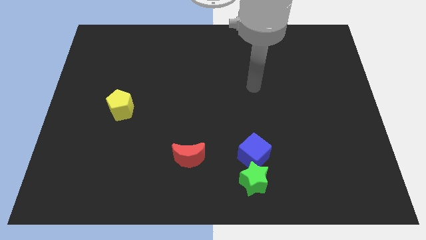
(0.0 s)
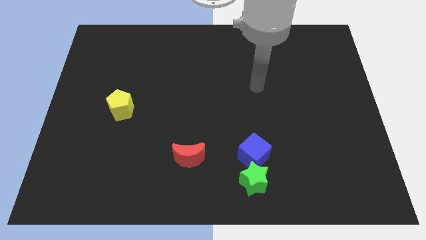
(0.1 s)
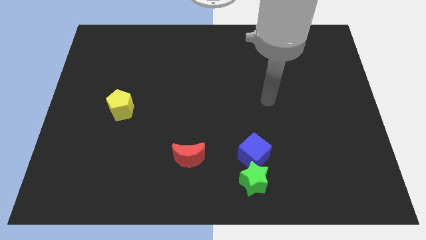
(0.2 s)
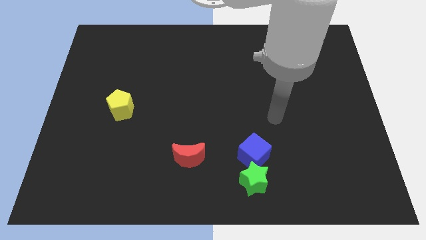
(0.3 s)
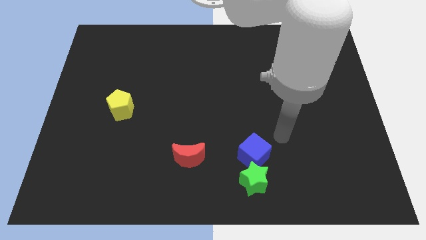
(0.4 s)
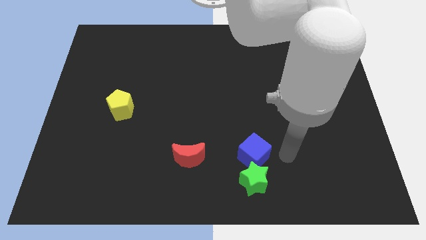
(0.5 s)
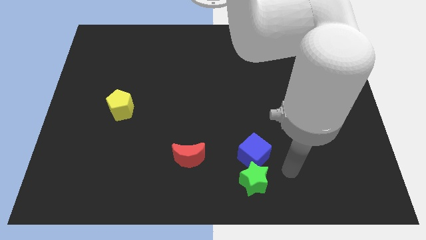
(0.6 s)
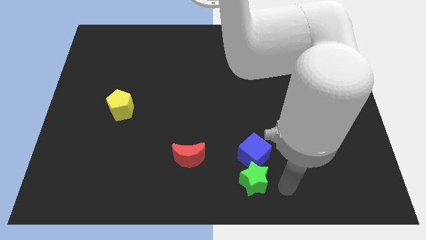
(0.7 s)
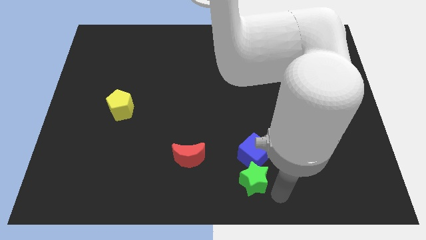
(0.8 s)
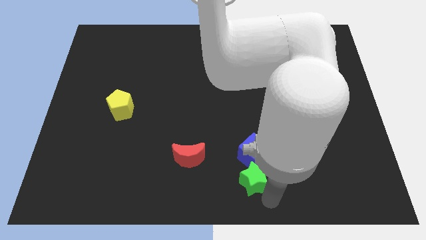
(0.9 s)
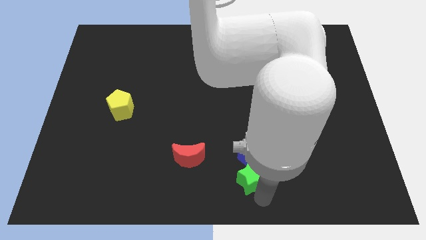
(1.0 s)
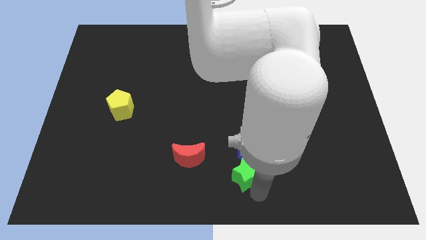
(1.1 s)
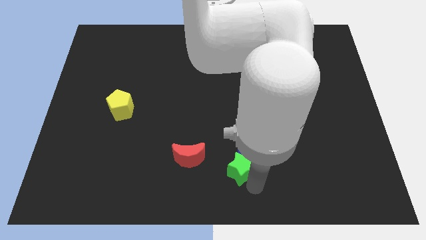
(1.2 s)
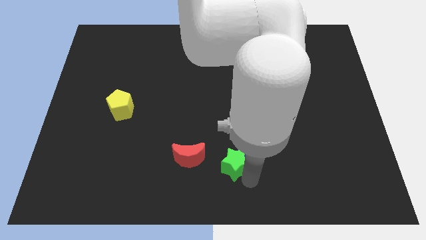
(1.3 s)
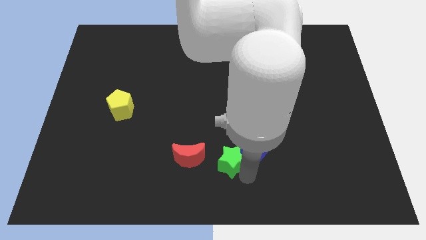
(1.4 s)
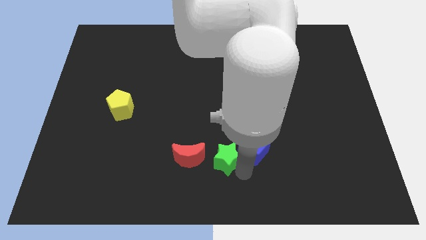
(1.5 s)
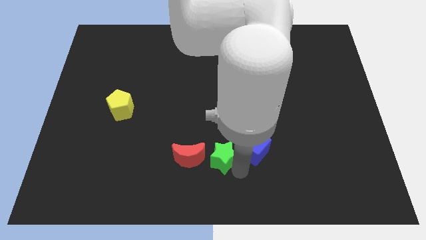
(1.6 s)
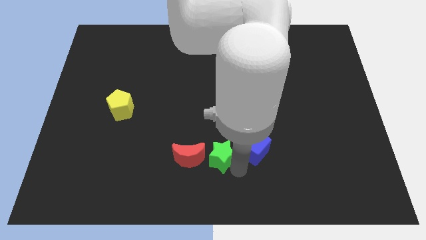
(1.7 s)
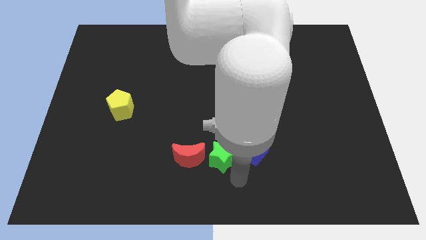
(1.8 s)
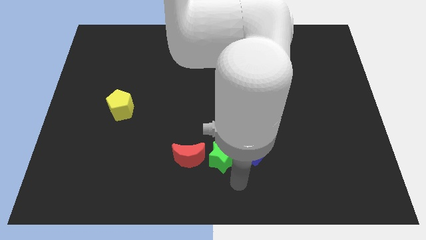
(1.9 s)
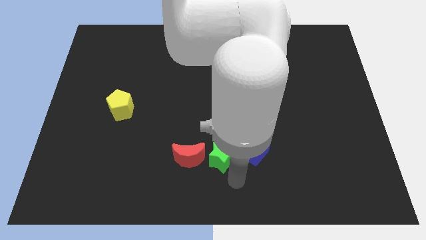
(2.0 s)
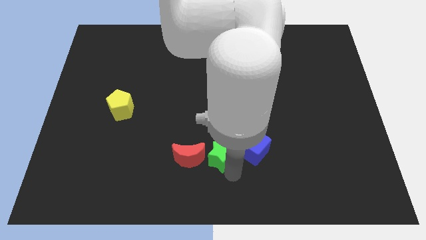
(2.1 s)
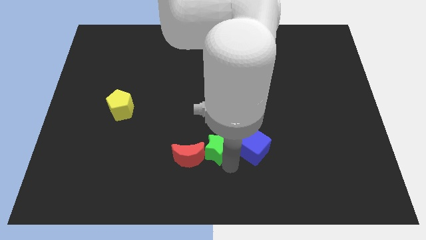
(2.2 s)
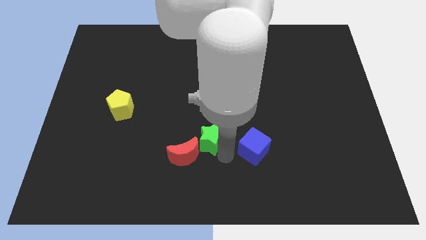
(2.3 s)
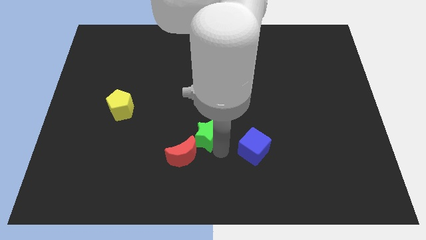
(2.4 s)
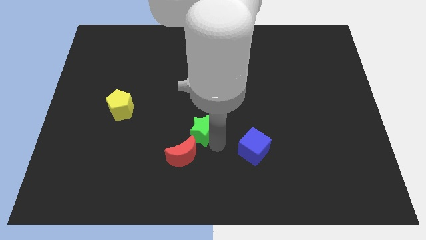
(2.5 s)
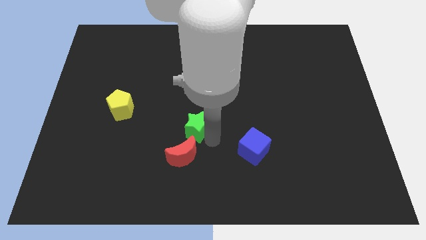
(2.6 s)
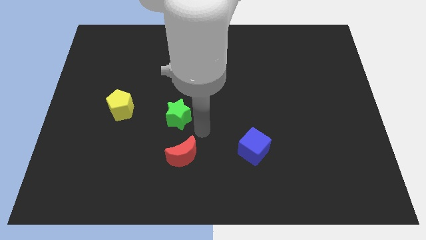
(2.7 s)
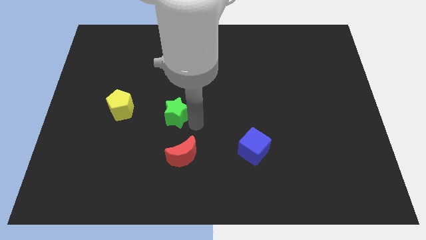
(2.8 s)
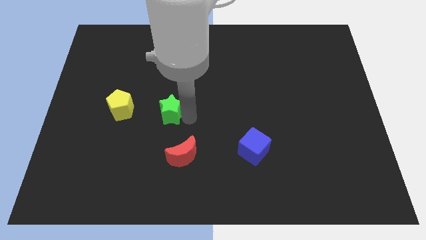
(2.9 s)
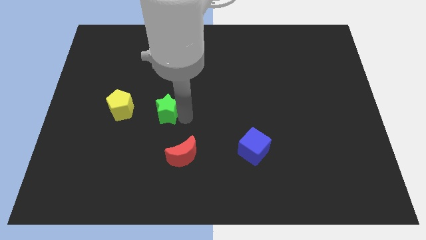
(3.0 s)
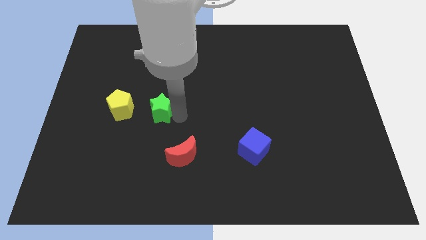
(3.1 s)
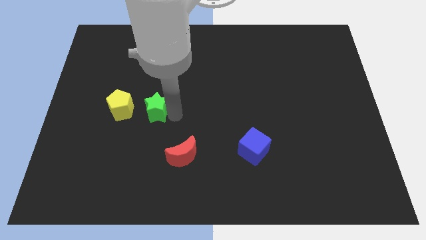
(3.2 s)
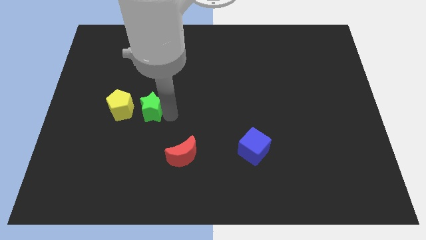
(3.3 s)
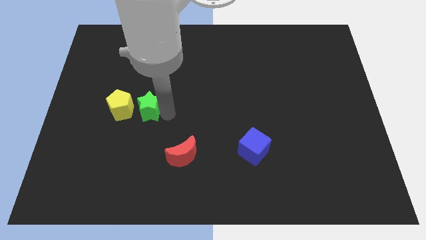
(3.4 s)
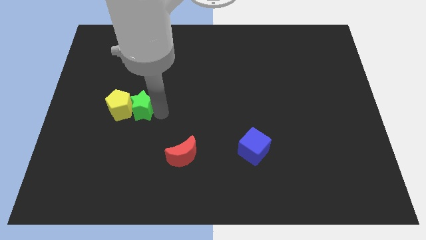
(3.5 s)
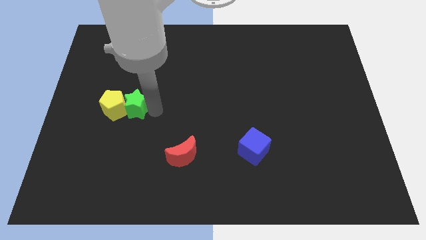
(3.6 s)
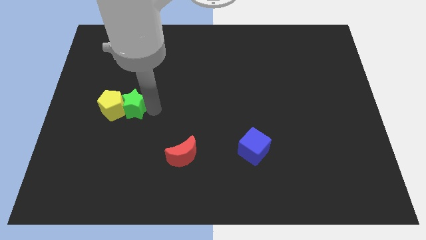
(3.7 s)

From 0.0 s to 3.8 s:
move the green block towards the pentagon

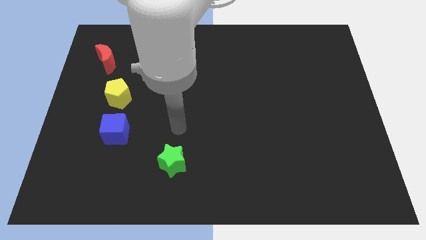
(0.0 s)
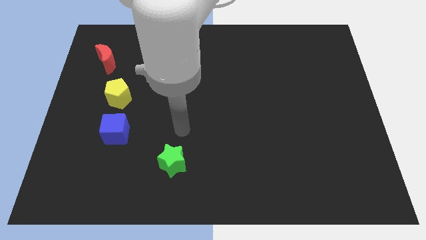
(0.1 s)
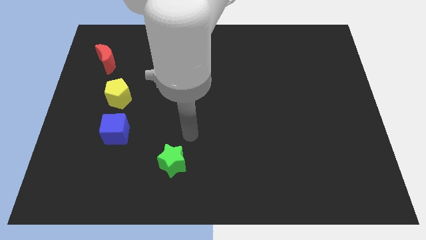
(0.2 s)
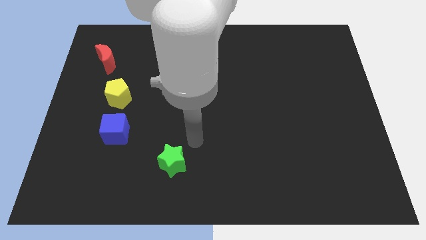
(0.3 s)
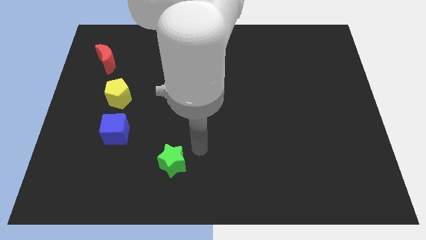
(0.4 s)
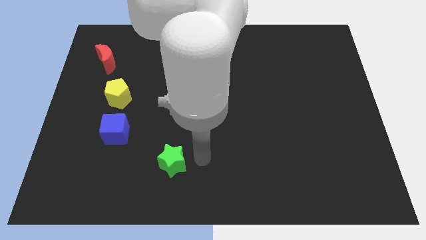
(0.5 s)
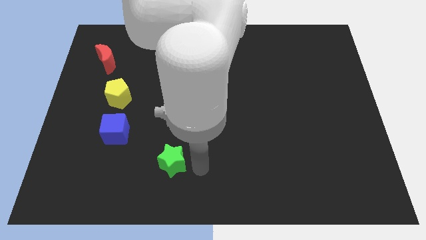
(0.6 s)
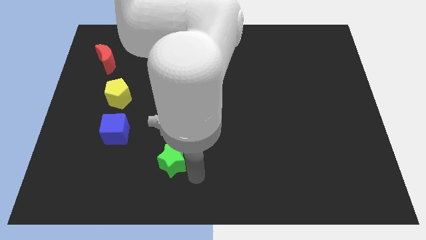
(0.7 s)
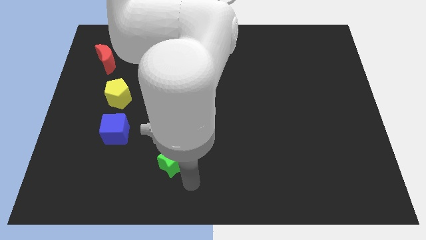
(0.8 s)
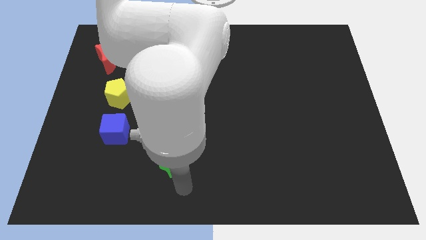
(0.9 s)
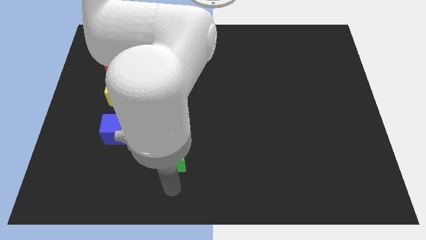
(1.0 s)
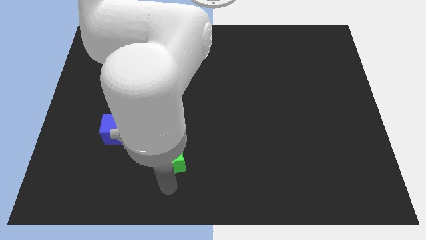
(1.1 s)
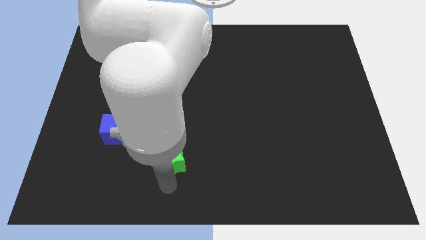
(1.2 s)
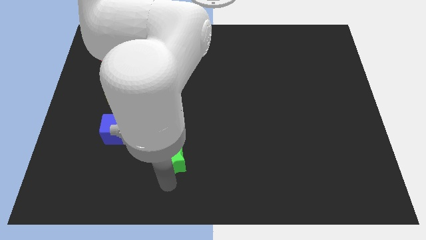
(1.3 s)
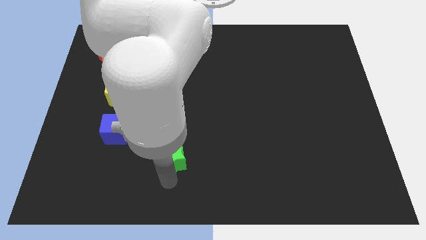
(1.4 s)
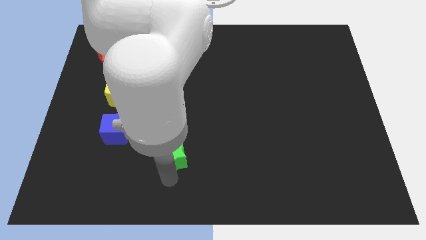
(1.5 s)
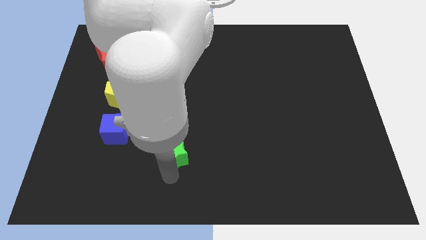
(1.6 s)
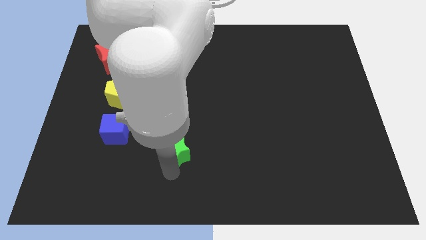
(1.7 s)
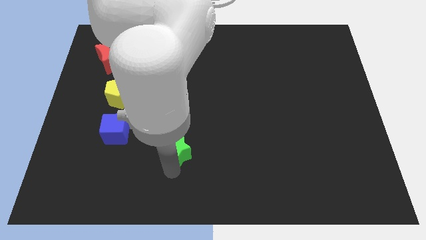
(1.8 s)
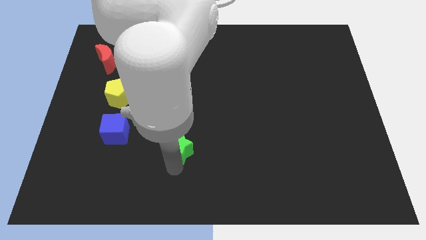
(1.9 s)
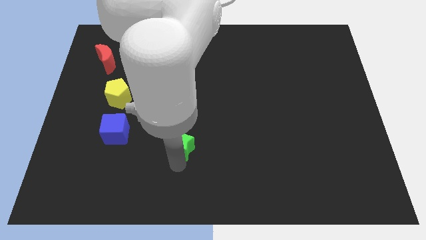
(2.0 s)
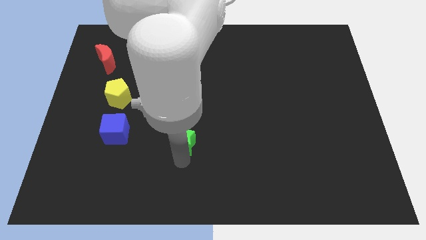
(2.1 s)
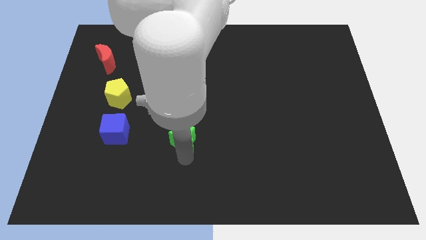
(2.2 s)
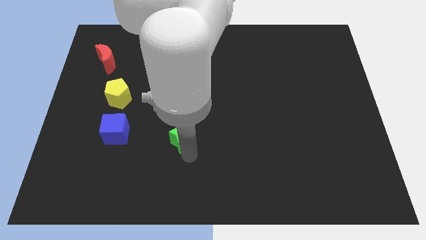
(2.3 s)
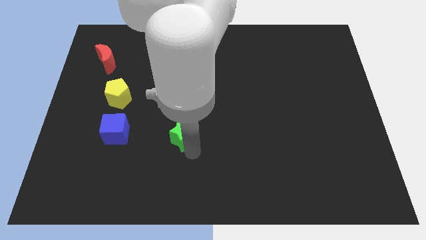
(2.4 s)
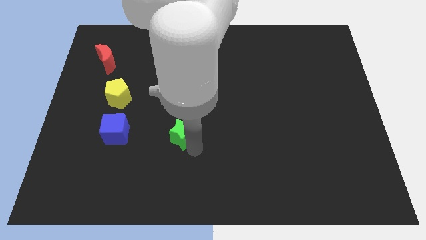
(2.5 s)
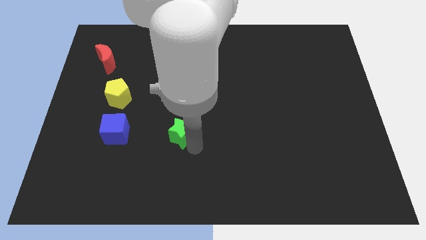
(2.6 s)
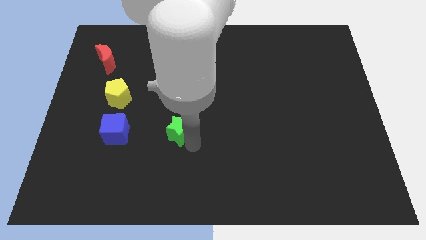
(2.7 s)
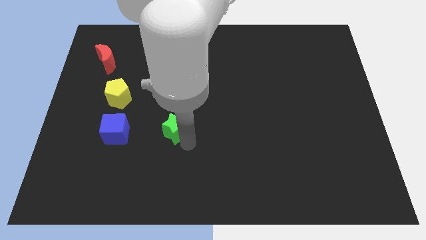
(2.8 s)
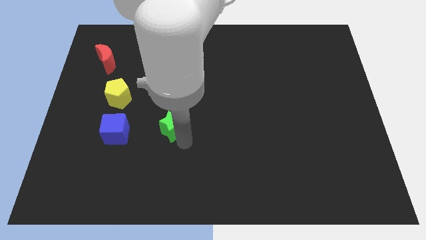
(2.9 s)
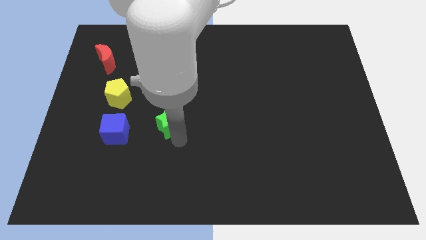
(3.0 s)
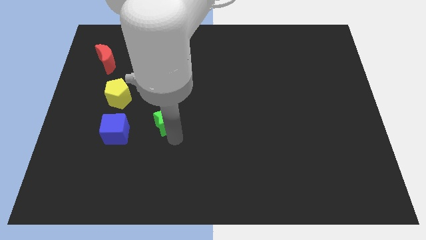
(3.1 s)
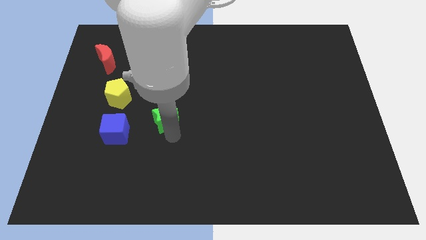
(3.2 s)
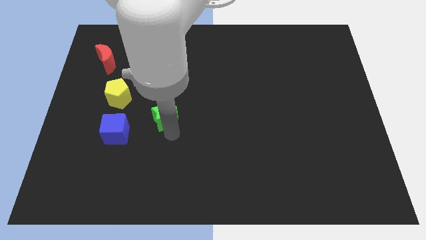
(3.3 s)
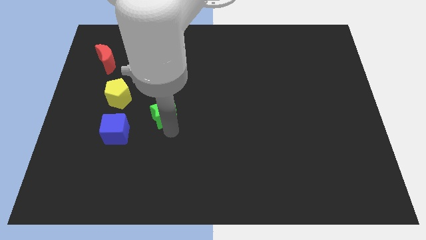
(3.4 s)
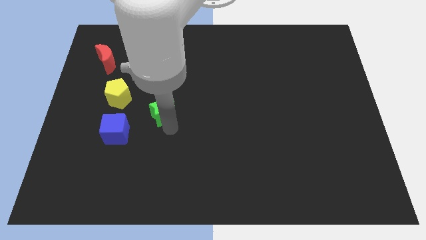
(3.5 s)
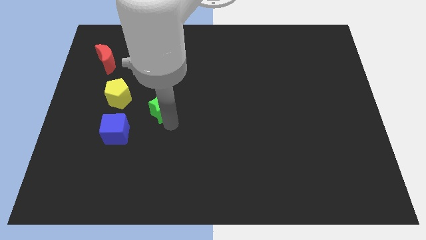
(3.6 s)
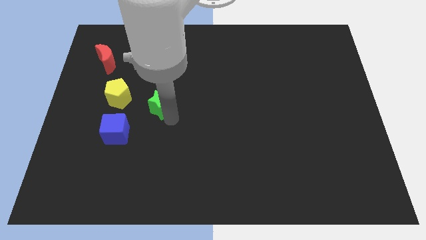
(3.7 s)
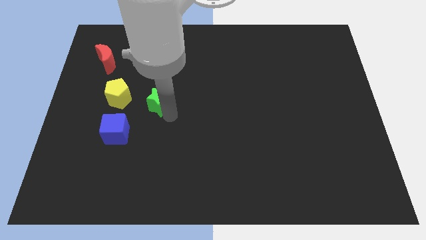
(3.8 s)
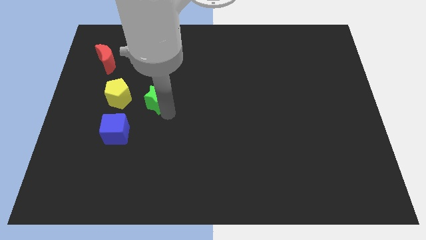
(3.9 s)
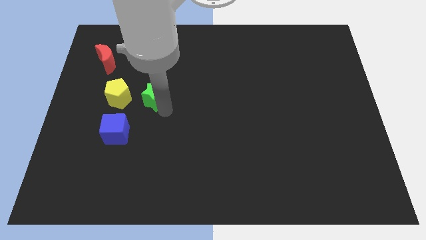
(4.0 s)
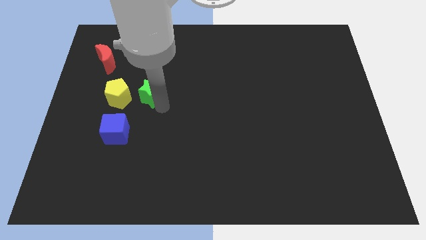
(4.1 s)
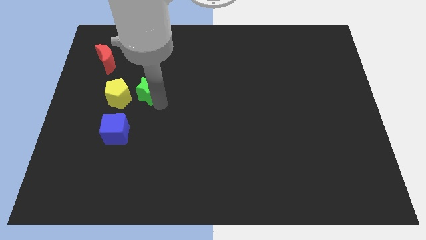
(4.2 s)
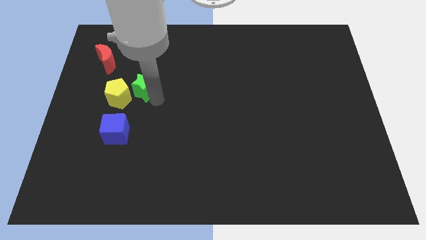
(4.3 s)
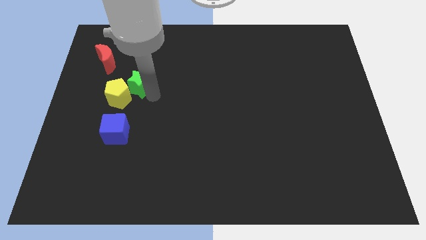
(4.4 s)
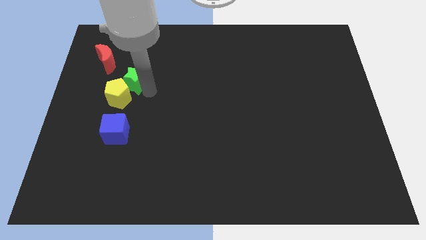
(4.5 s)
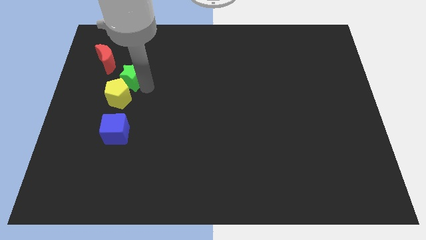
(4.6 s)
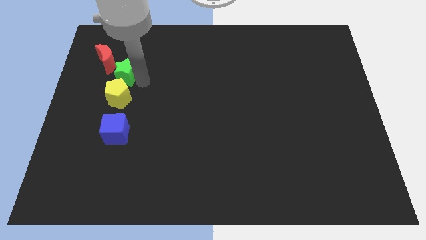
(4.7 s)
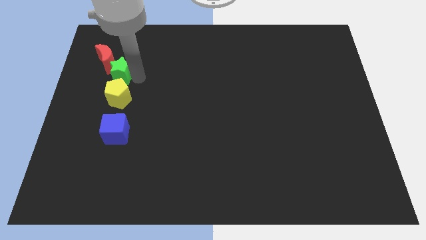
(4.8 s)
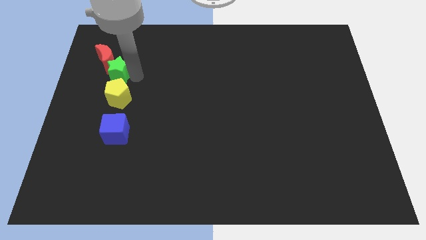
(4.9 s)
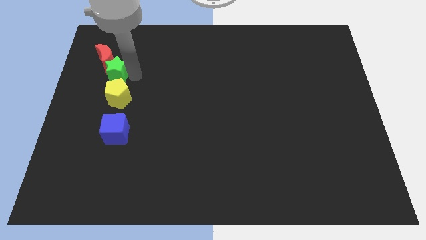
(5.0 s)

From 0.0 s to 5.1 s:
put the green block towards the red moon
